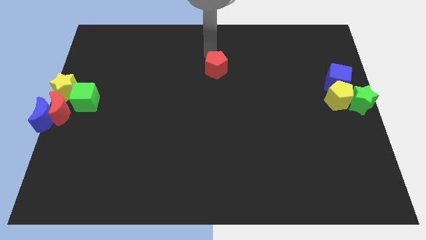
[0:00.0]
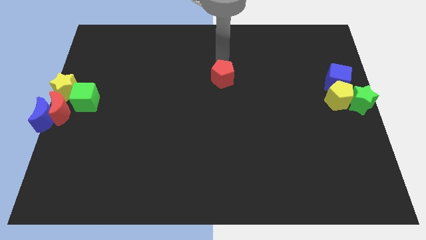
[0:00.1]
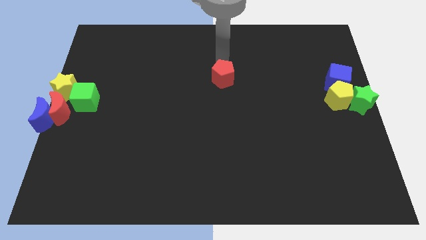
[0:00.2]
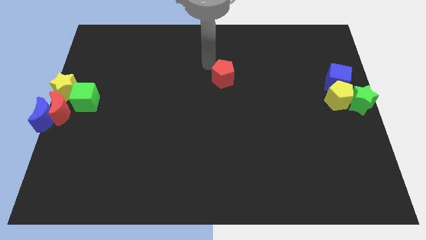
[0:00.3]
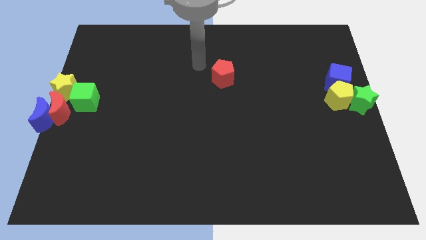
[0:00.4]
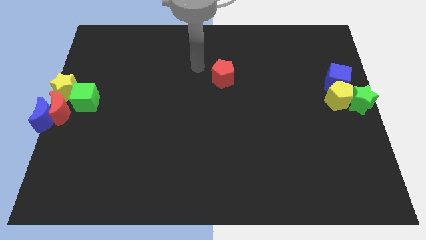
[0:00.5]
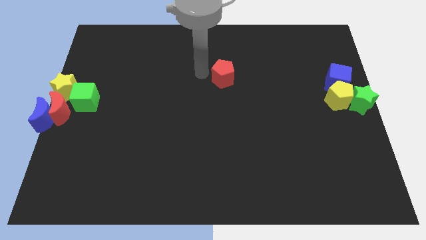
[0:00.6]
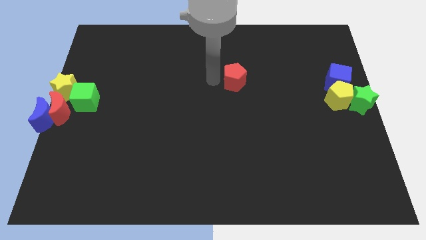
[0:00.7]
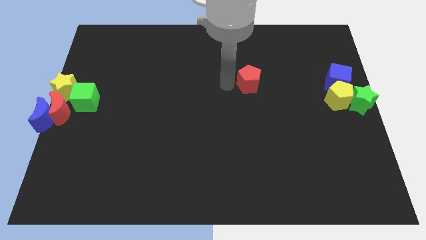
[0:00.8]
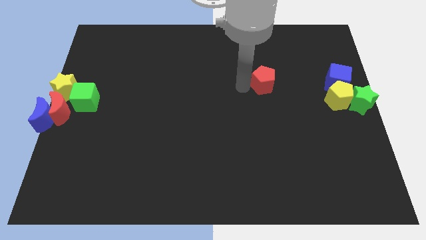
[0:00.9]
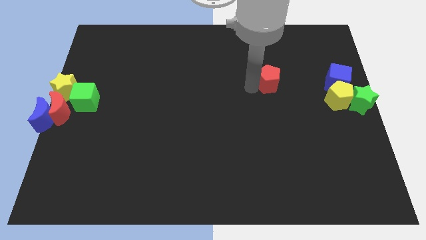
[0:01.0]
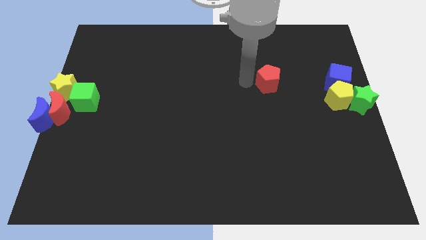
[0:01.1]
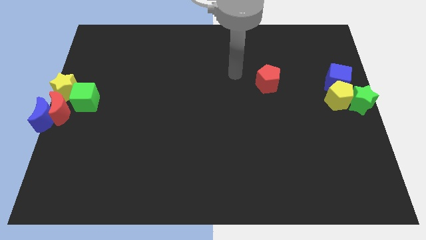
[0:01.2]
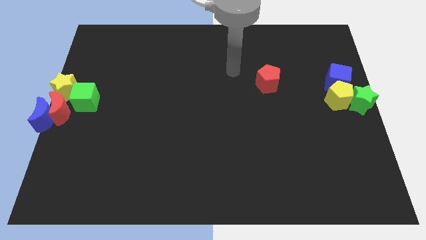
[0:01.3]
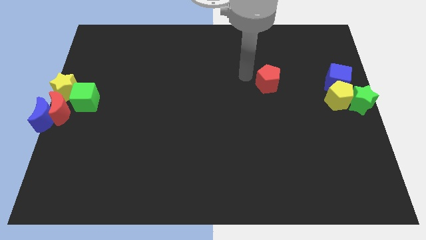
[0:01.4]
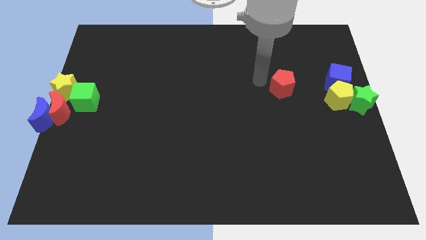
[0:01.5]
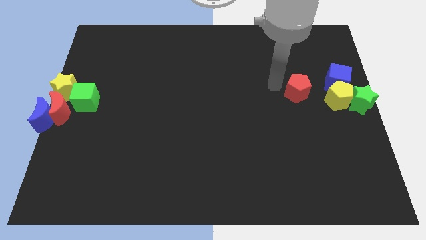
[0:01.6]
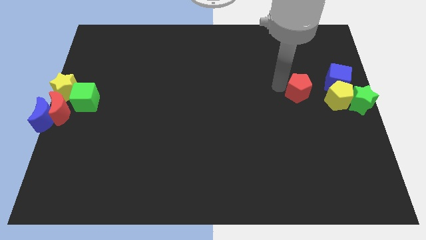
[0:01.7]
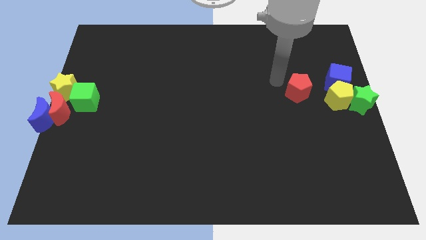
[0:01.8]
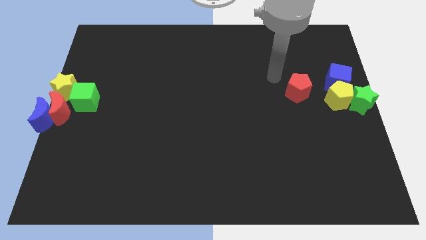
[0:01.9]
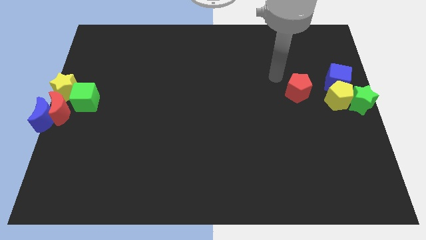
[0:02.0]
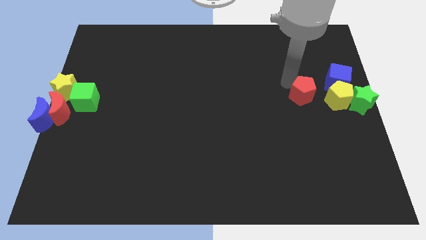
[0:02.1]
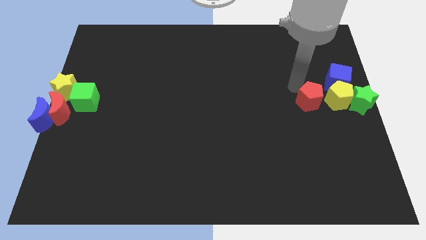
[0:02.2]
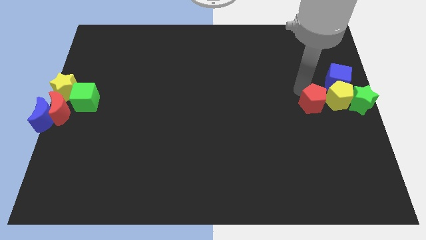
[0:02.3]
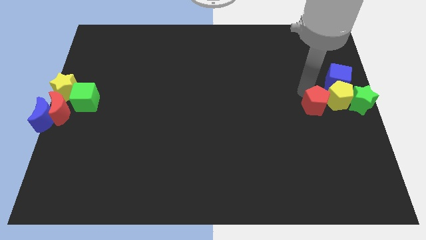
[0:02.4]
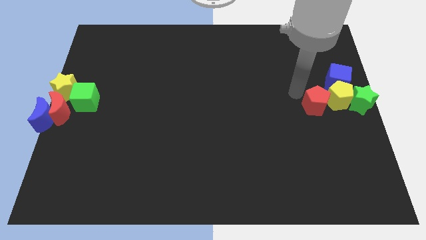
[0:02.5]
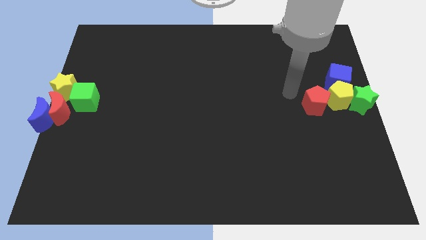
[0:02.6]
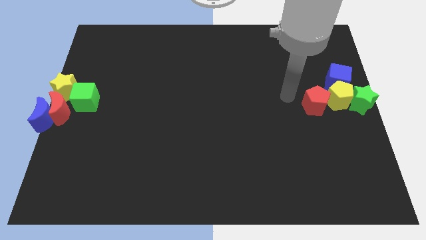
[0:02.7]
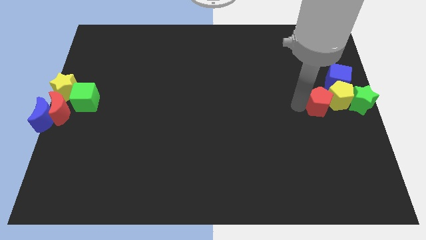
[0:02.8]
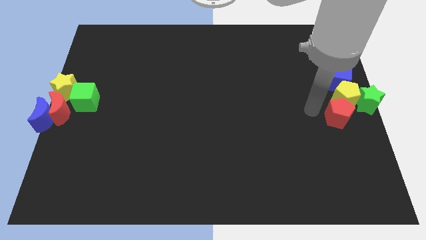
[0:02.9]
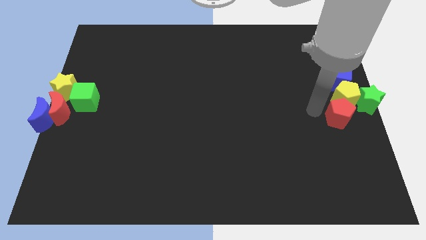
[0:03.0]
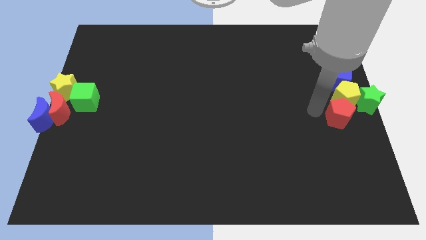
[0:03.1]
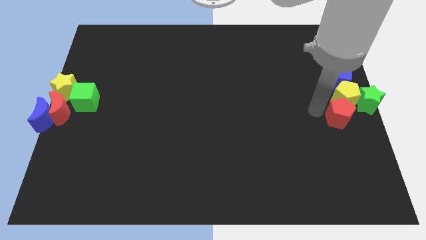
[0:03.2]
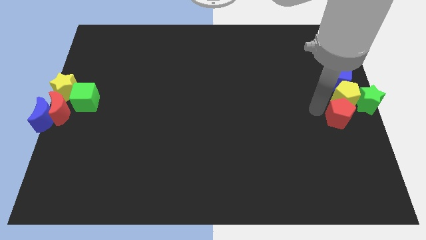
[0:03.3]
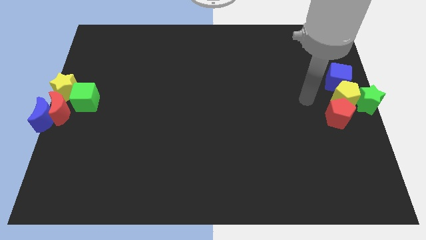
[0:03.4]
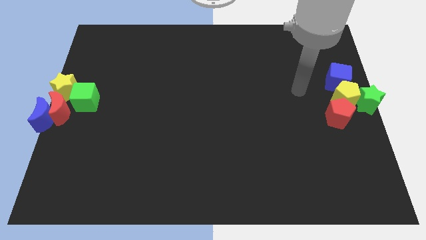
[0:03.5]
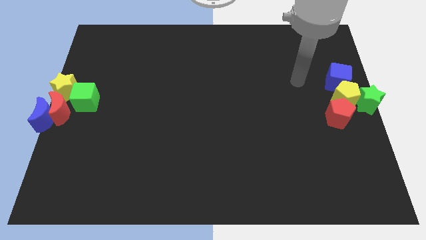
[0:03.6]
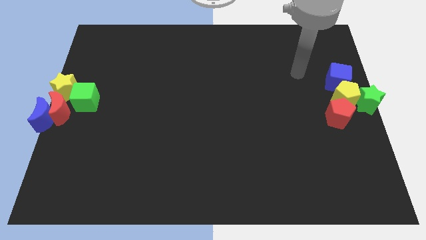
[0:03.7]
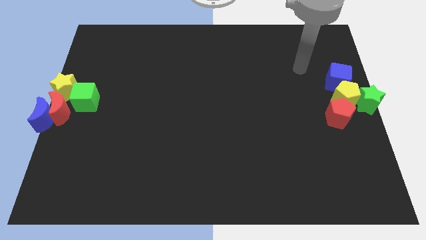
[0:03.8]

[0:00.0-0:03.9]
place the red pentagon towards the bottom left side of the yellow pentagon

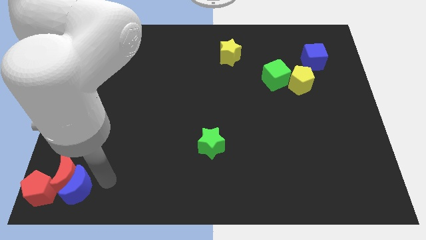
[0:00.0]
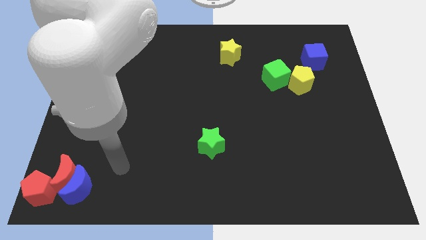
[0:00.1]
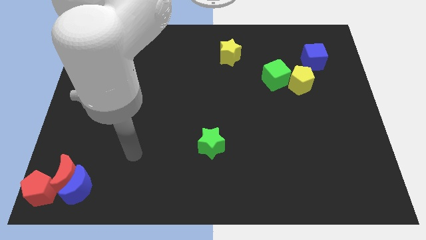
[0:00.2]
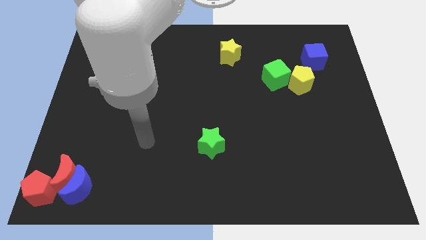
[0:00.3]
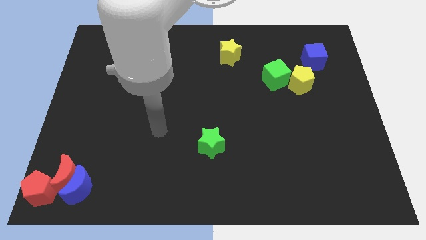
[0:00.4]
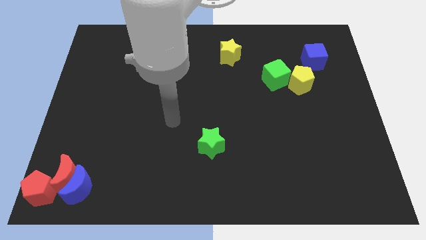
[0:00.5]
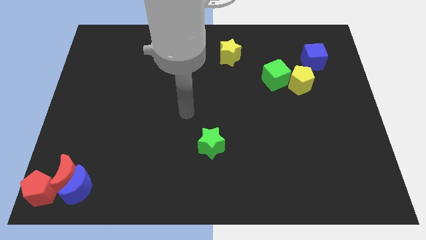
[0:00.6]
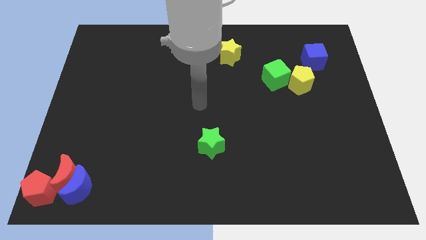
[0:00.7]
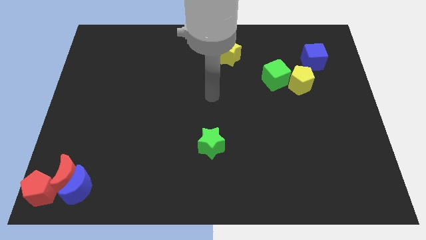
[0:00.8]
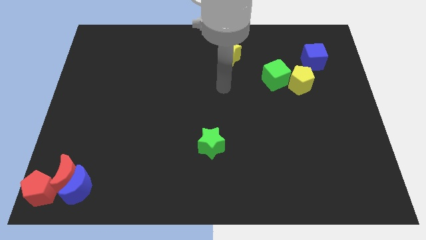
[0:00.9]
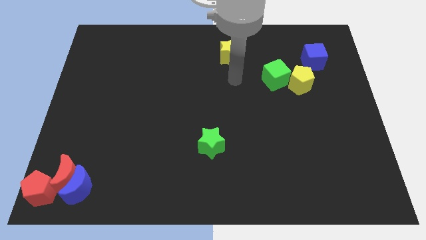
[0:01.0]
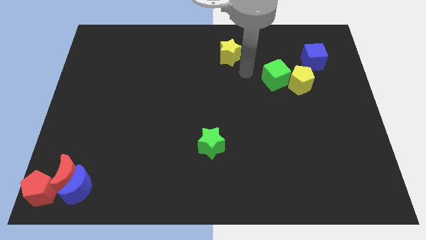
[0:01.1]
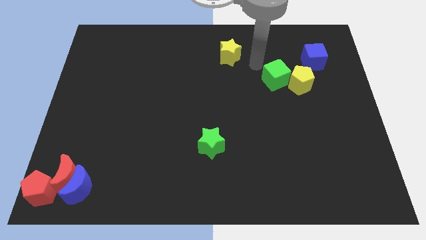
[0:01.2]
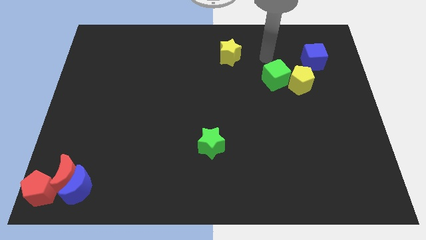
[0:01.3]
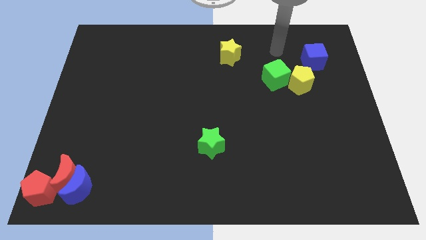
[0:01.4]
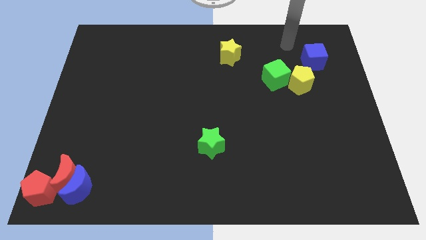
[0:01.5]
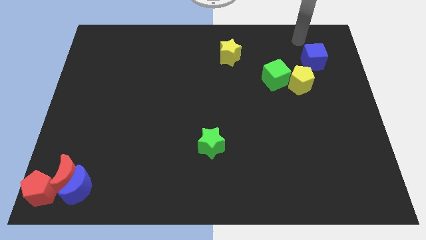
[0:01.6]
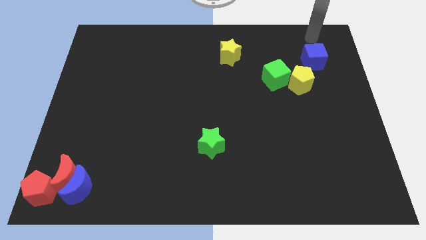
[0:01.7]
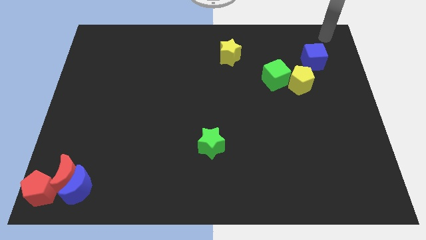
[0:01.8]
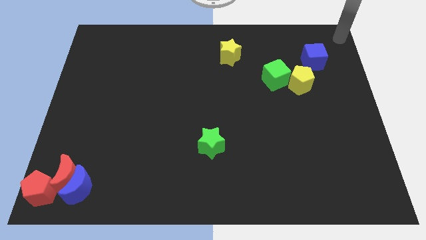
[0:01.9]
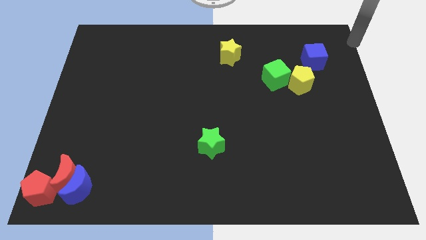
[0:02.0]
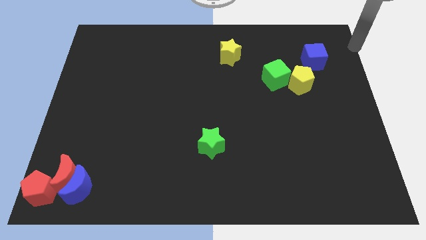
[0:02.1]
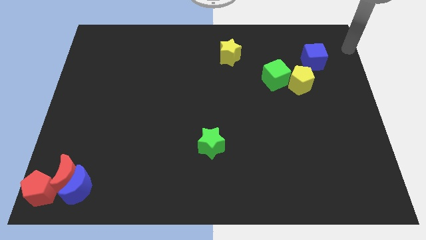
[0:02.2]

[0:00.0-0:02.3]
move your arm towards the top right of the board

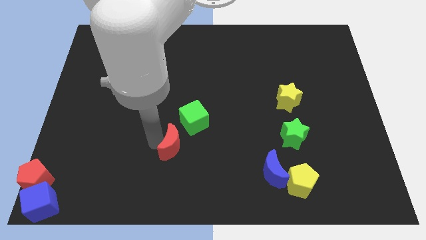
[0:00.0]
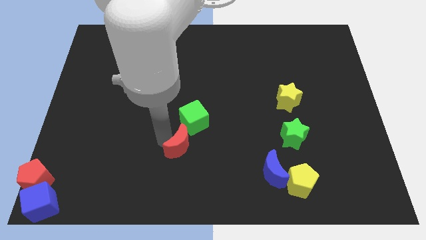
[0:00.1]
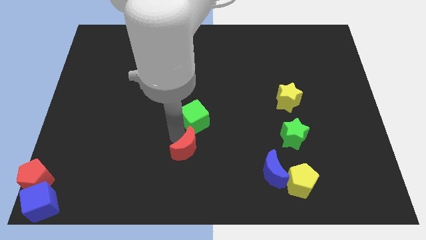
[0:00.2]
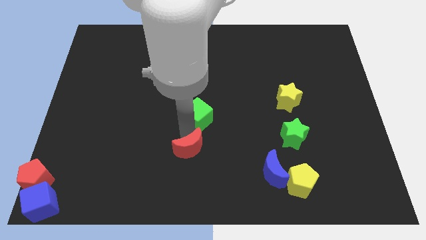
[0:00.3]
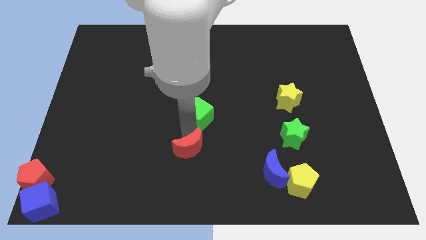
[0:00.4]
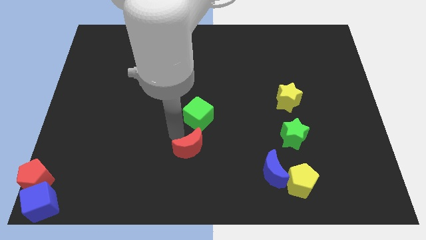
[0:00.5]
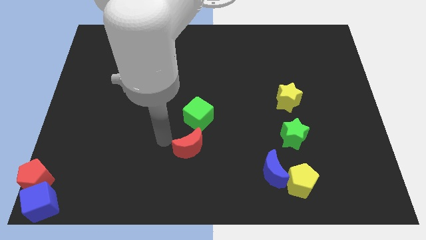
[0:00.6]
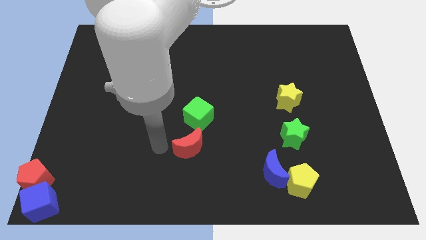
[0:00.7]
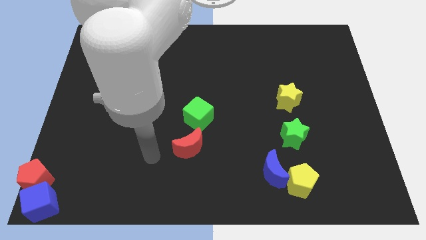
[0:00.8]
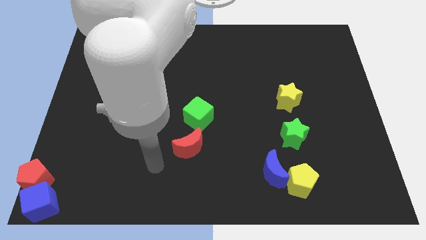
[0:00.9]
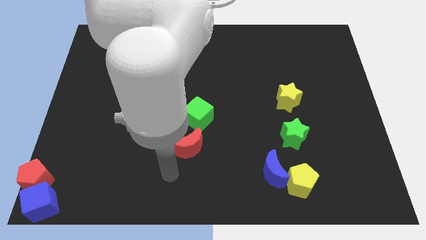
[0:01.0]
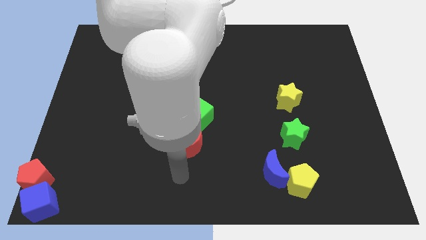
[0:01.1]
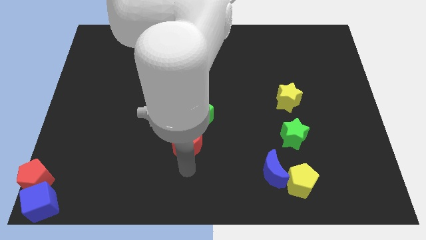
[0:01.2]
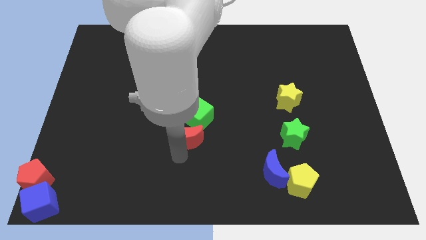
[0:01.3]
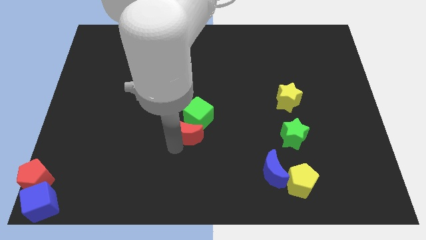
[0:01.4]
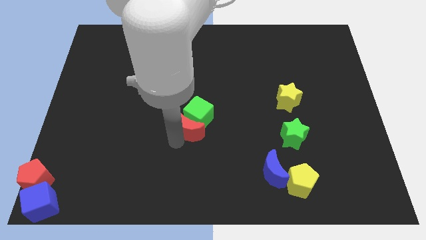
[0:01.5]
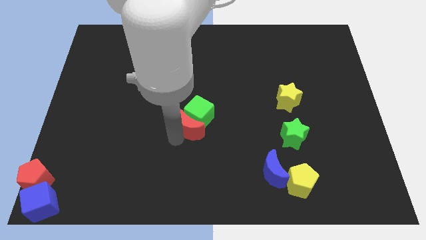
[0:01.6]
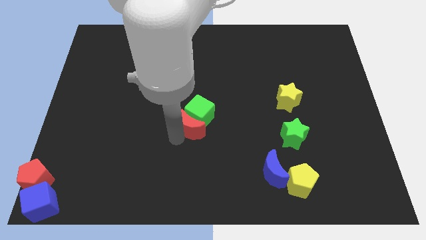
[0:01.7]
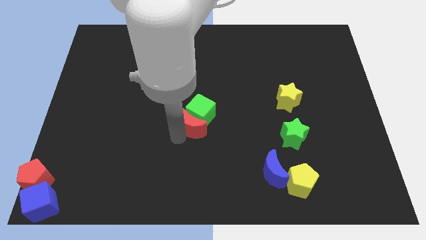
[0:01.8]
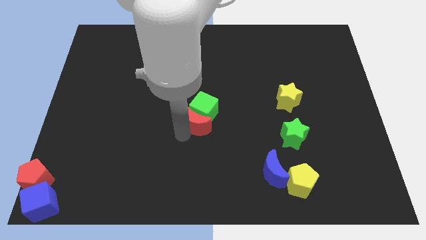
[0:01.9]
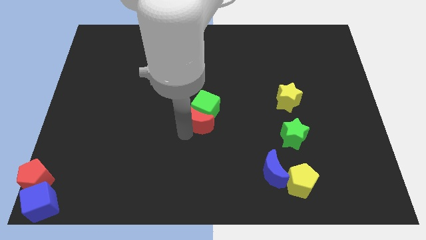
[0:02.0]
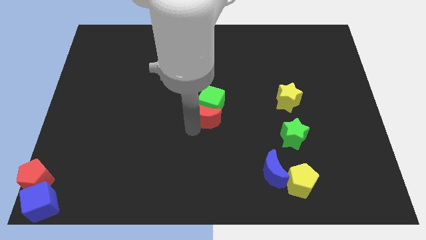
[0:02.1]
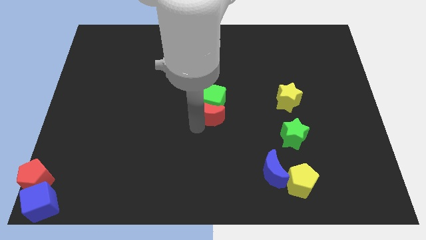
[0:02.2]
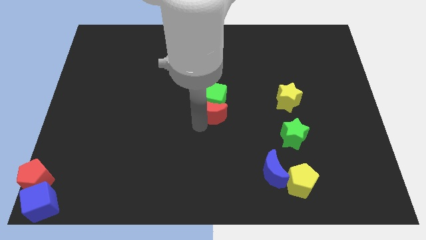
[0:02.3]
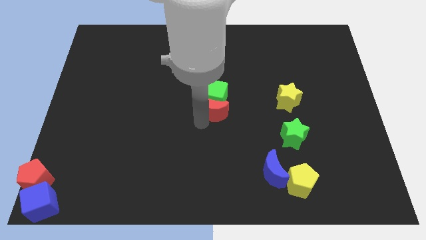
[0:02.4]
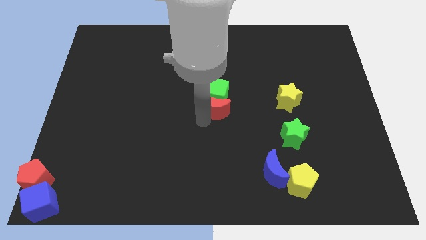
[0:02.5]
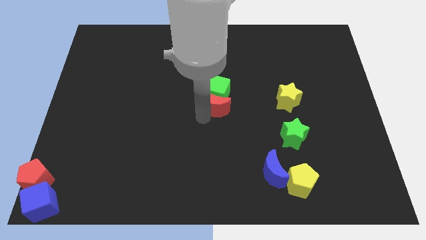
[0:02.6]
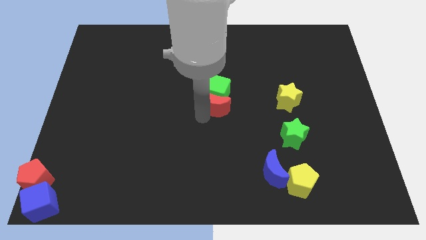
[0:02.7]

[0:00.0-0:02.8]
push the red crescent along with the green cube slightly to the top
